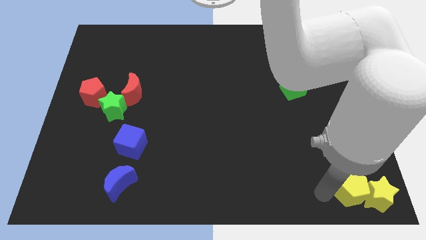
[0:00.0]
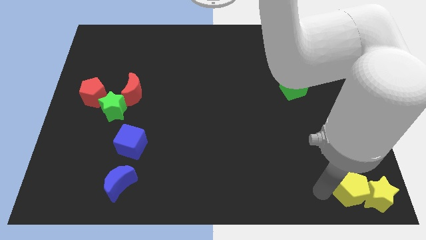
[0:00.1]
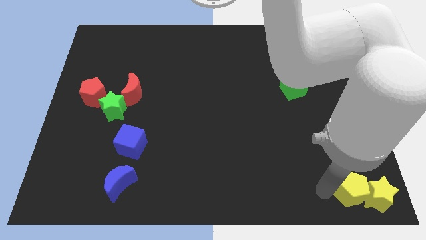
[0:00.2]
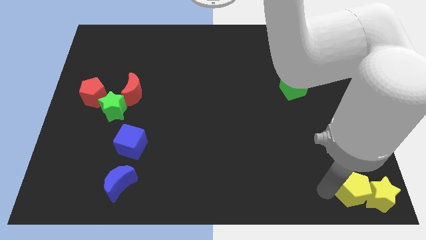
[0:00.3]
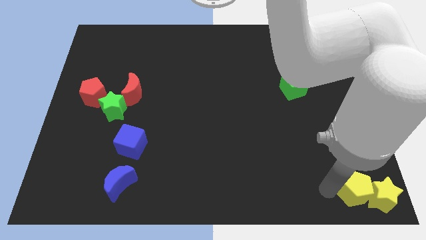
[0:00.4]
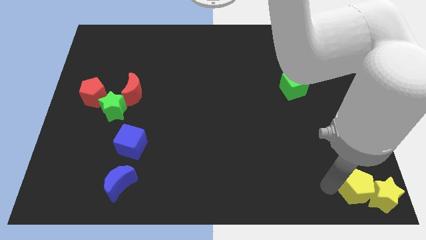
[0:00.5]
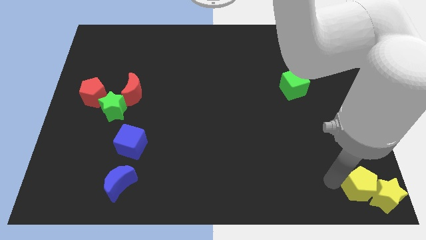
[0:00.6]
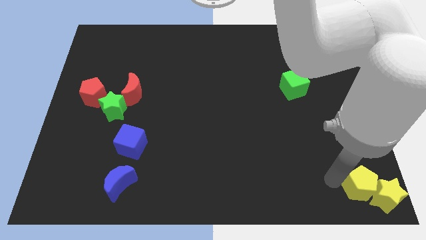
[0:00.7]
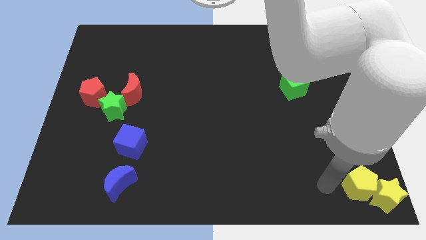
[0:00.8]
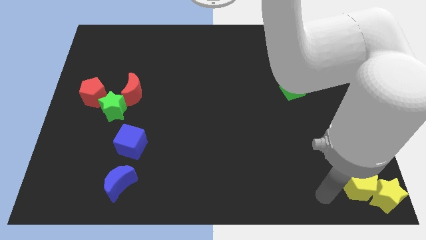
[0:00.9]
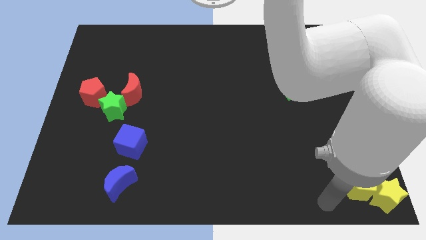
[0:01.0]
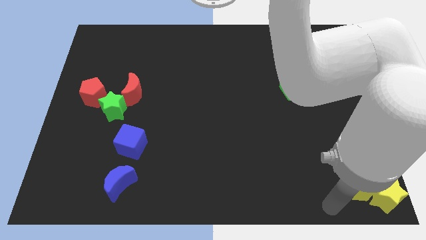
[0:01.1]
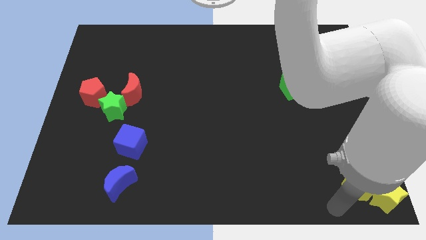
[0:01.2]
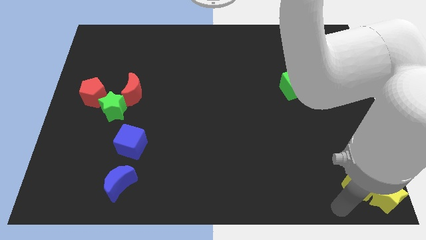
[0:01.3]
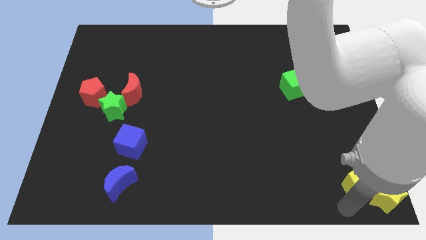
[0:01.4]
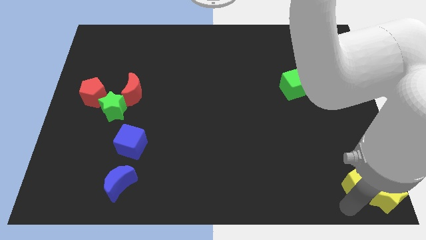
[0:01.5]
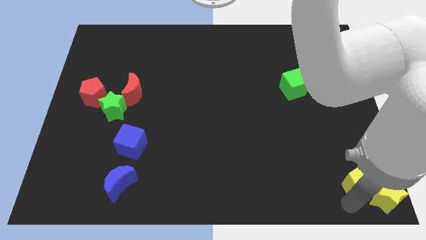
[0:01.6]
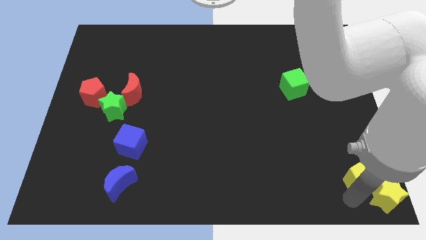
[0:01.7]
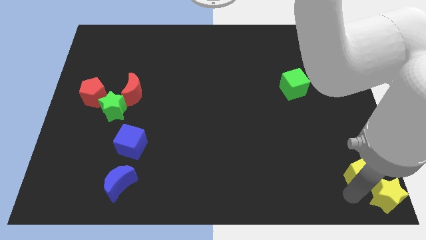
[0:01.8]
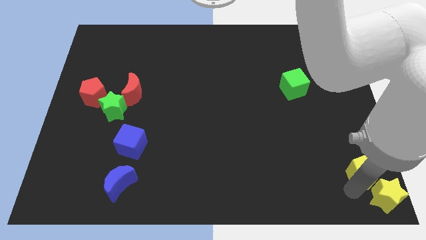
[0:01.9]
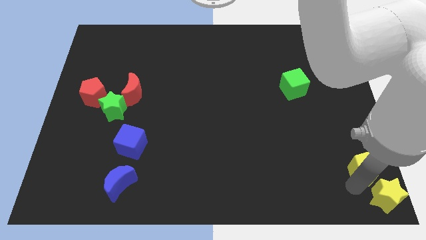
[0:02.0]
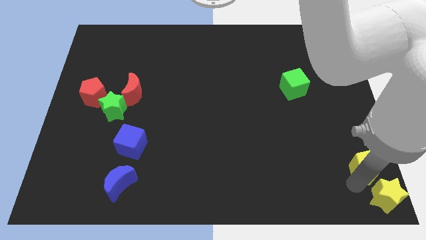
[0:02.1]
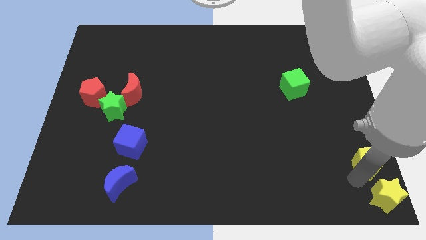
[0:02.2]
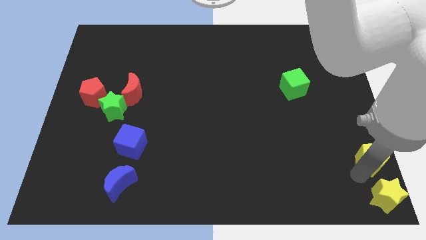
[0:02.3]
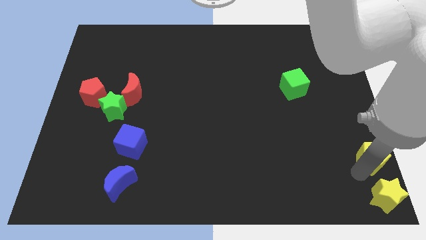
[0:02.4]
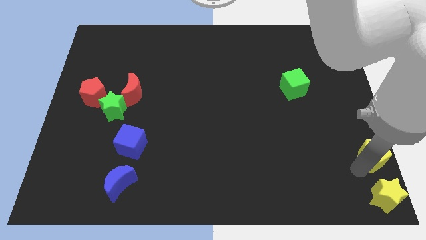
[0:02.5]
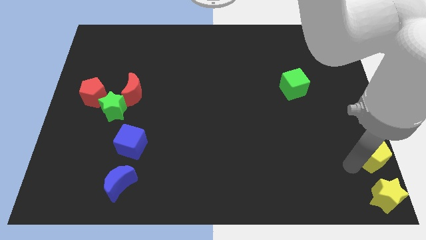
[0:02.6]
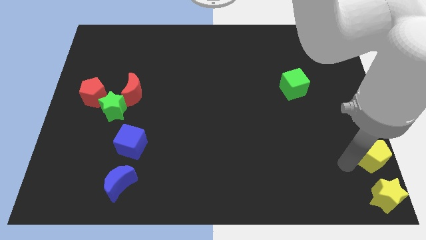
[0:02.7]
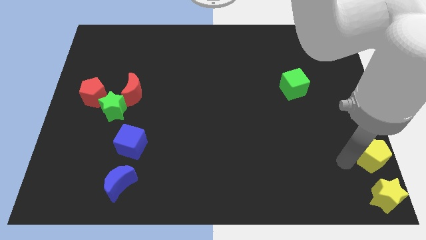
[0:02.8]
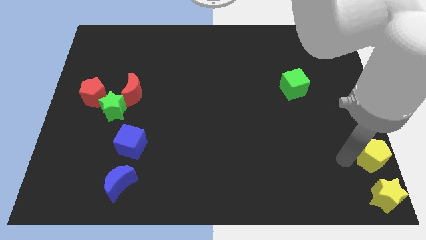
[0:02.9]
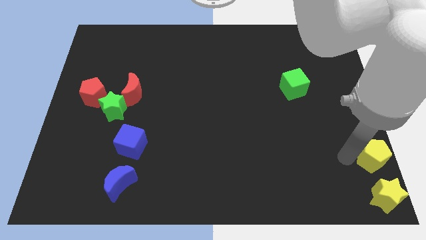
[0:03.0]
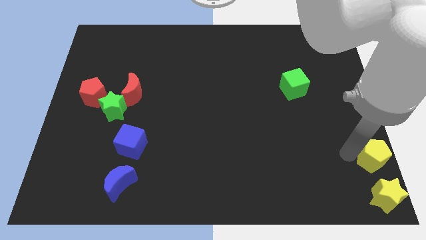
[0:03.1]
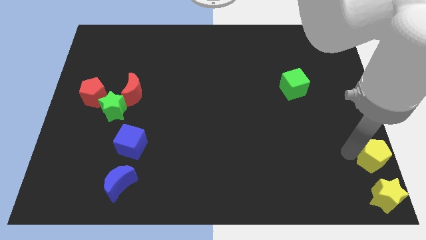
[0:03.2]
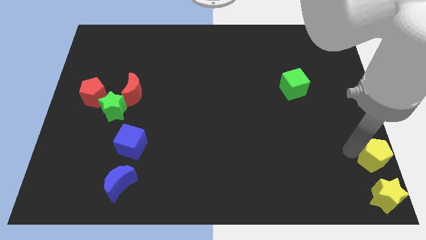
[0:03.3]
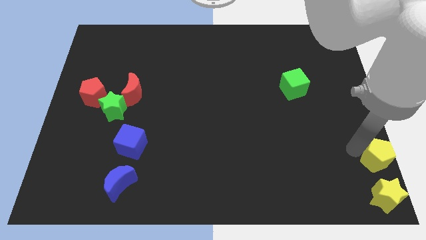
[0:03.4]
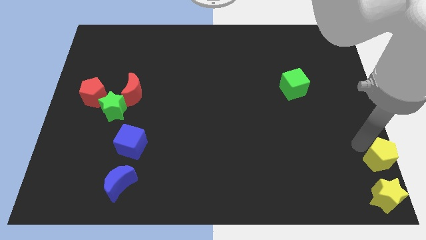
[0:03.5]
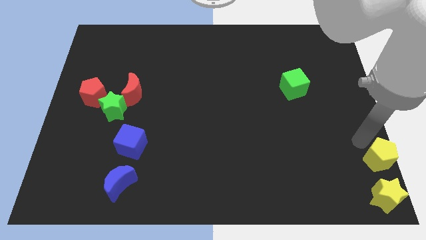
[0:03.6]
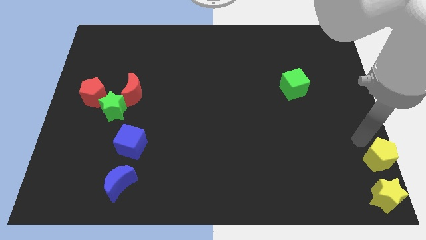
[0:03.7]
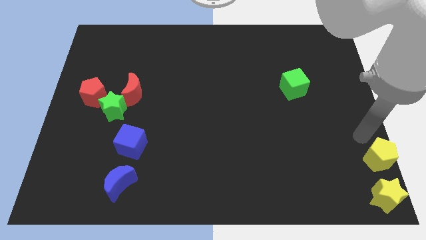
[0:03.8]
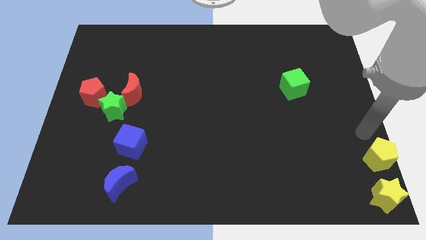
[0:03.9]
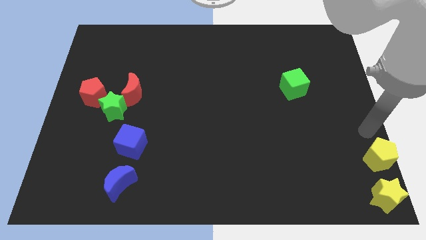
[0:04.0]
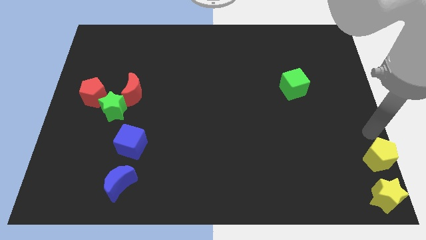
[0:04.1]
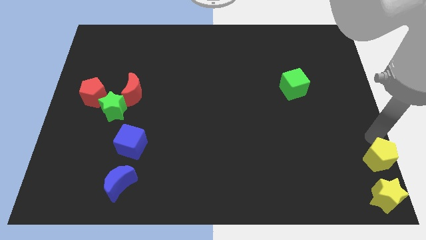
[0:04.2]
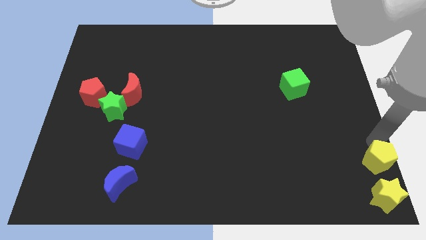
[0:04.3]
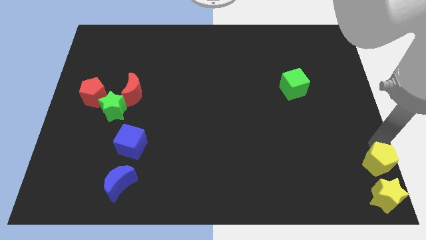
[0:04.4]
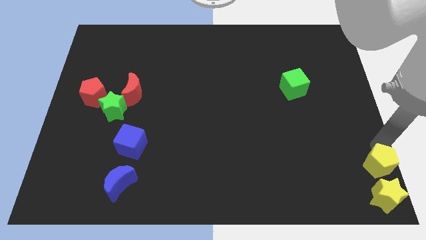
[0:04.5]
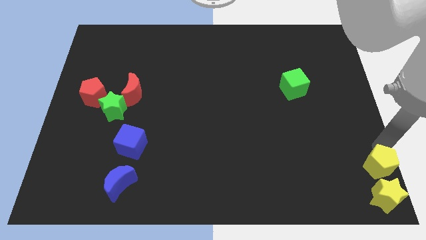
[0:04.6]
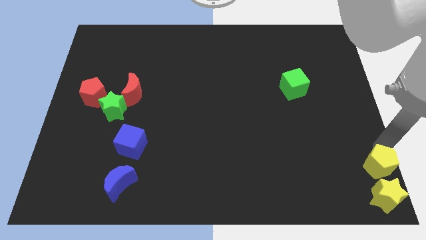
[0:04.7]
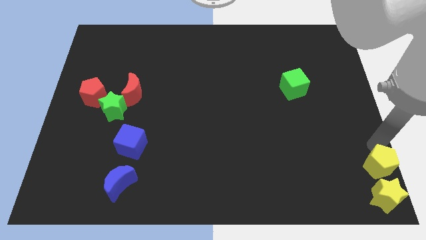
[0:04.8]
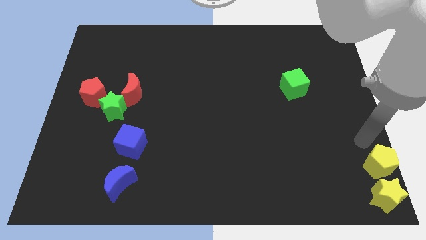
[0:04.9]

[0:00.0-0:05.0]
place the yellow pentagon above the yellow star

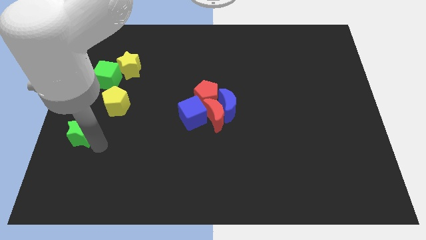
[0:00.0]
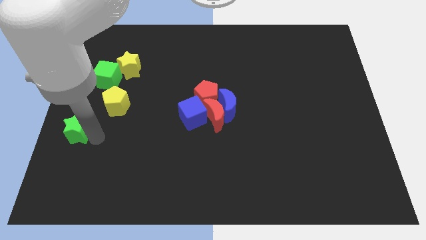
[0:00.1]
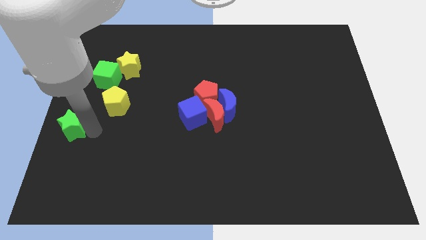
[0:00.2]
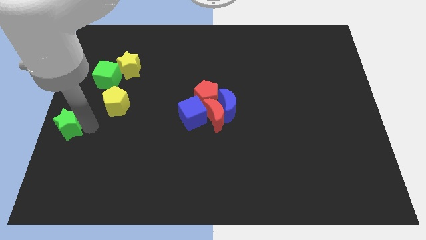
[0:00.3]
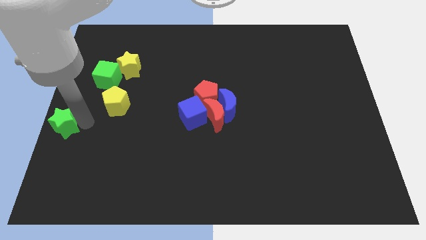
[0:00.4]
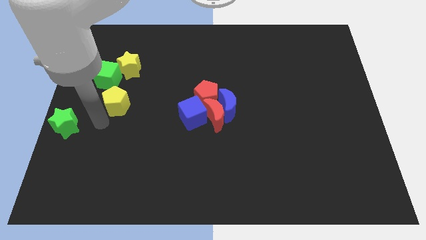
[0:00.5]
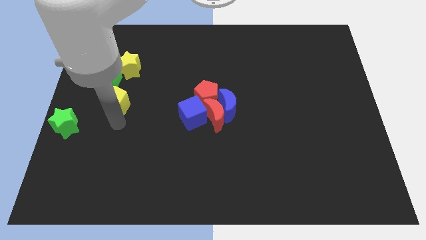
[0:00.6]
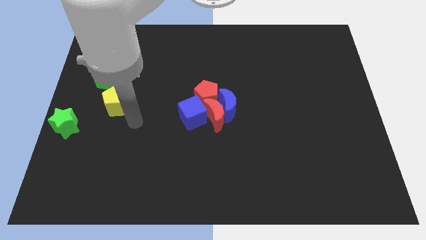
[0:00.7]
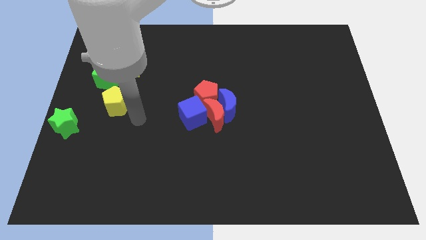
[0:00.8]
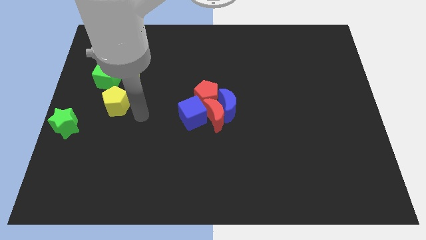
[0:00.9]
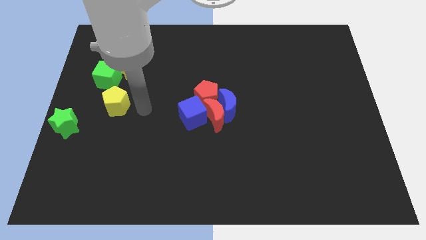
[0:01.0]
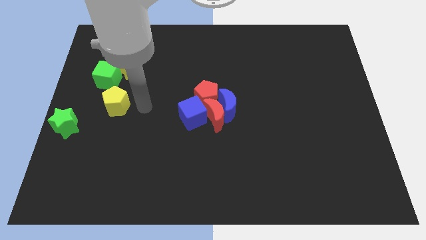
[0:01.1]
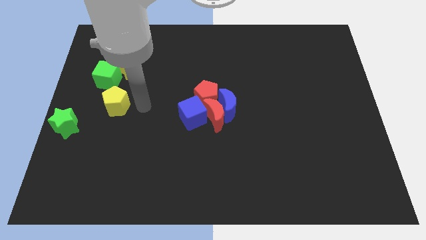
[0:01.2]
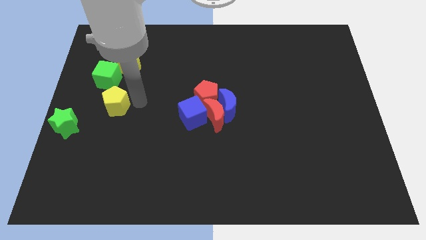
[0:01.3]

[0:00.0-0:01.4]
move the green star to the left side of the board

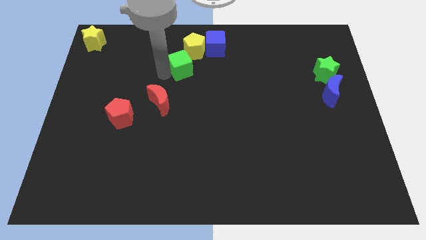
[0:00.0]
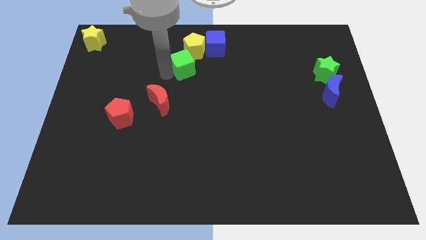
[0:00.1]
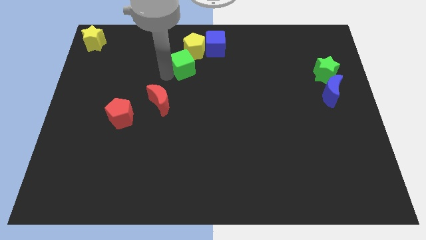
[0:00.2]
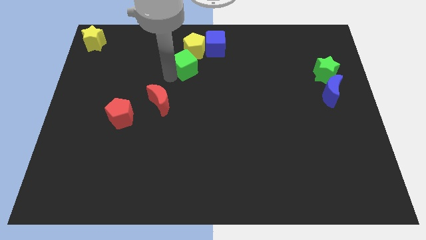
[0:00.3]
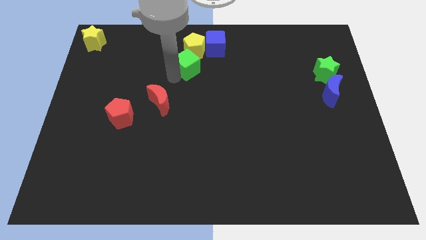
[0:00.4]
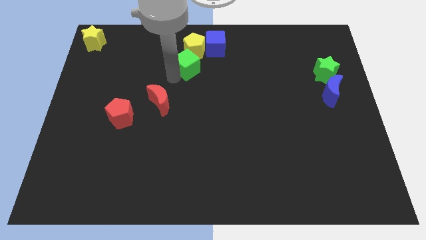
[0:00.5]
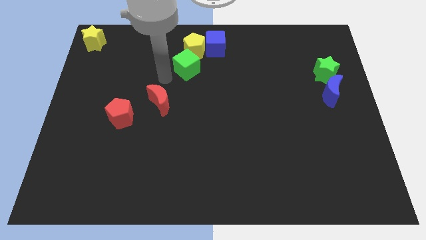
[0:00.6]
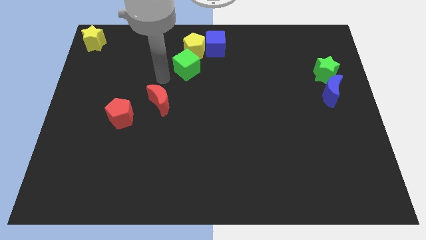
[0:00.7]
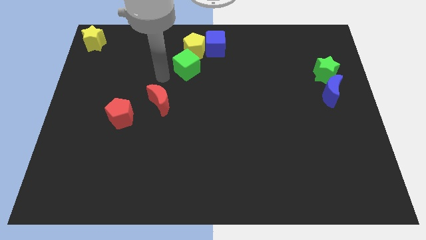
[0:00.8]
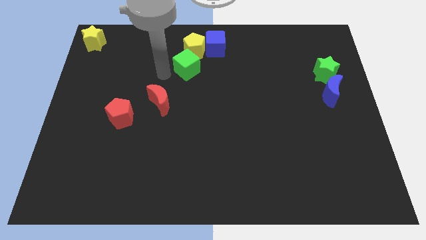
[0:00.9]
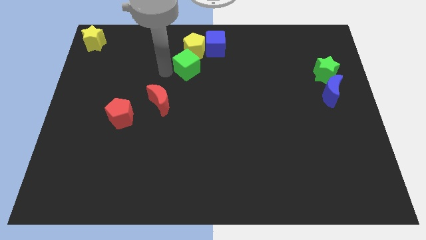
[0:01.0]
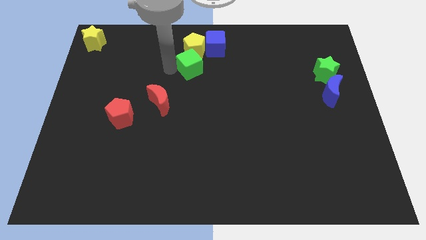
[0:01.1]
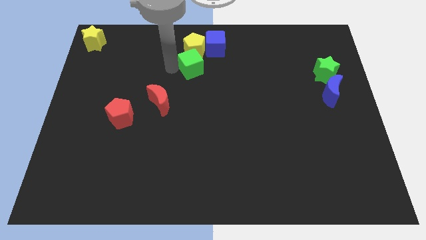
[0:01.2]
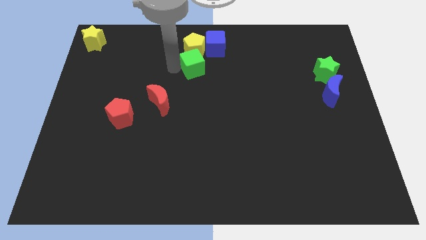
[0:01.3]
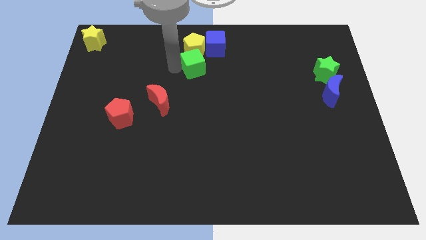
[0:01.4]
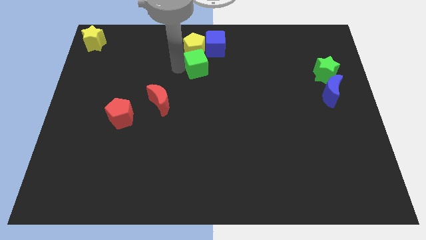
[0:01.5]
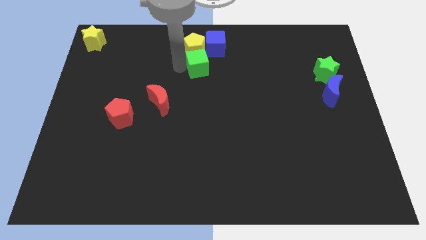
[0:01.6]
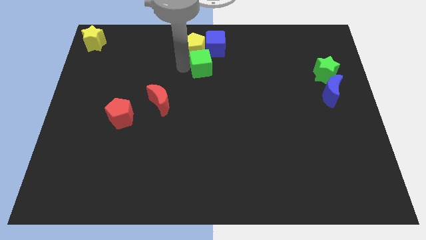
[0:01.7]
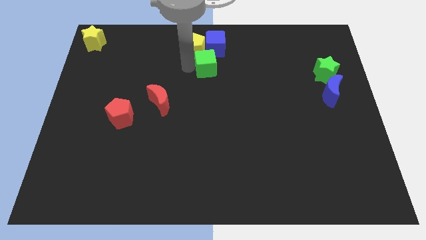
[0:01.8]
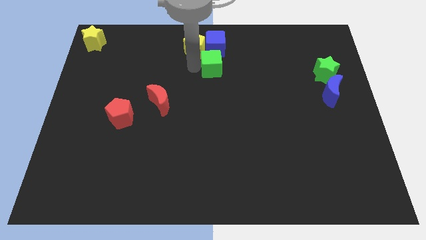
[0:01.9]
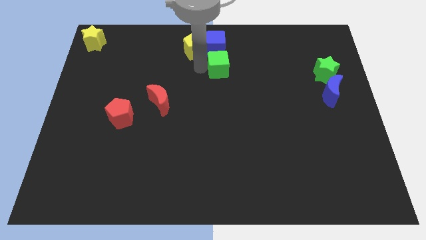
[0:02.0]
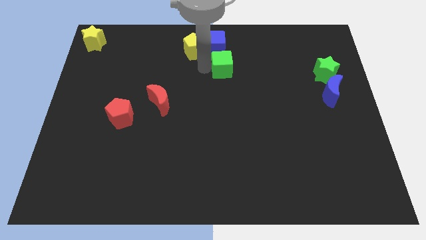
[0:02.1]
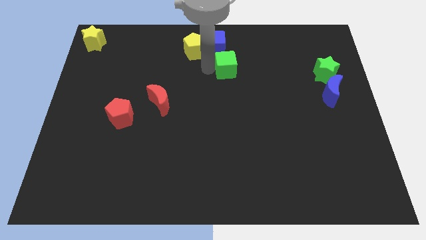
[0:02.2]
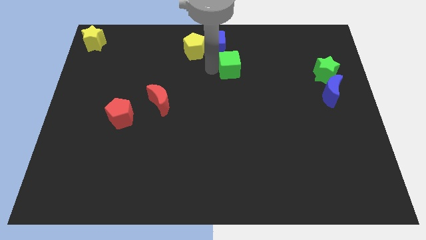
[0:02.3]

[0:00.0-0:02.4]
move the green cube slightly to the right

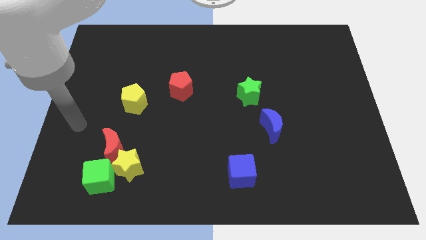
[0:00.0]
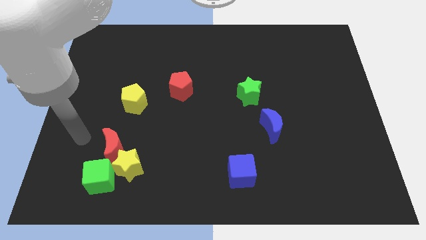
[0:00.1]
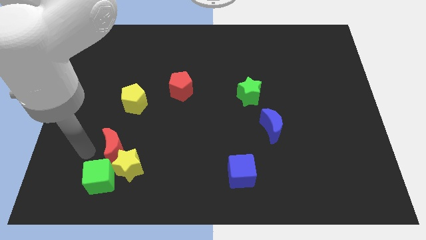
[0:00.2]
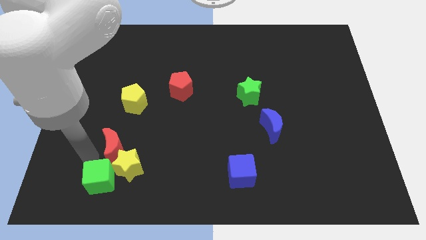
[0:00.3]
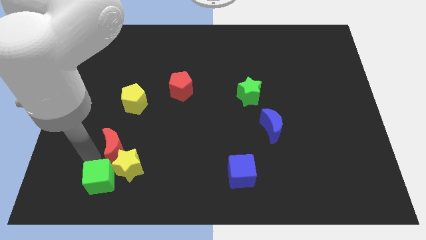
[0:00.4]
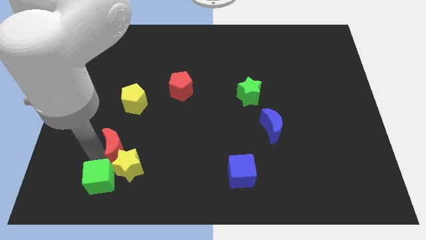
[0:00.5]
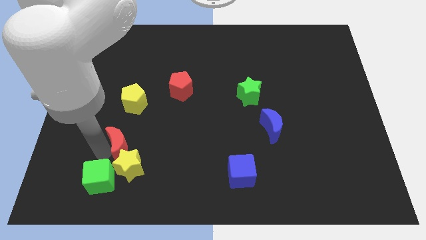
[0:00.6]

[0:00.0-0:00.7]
slide the arm in between green cube and red moon
